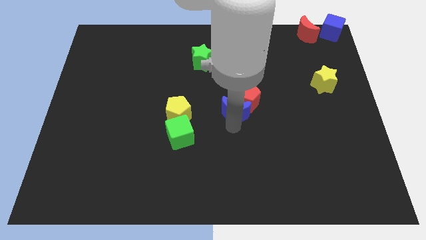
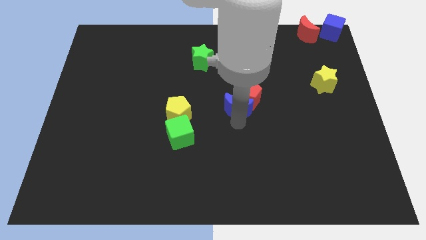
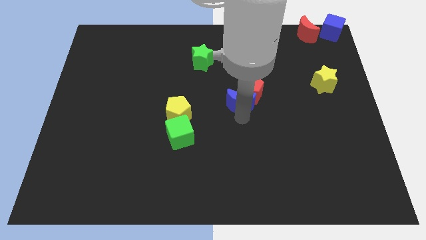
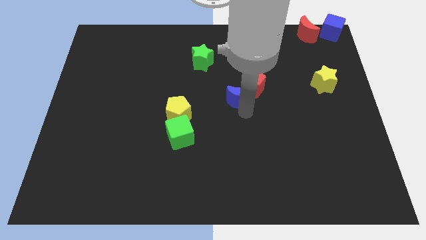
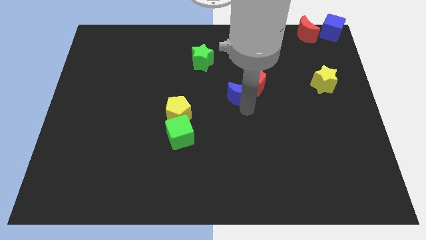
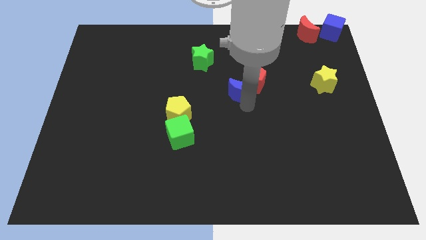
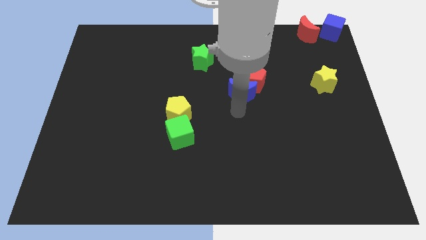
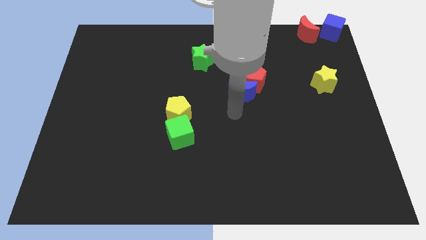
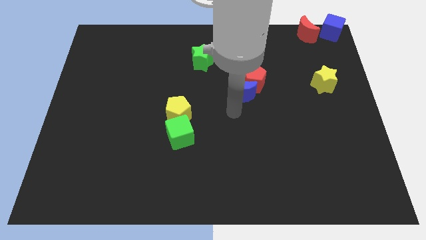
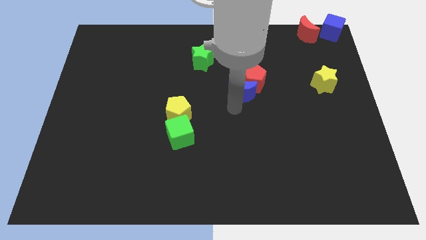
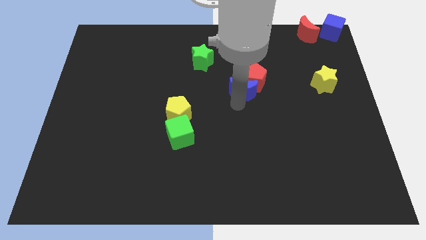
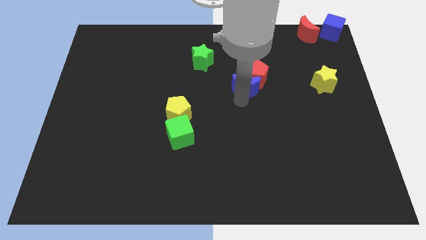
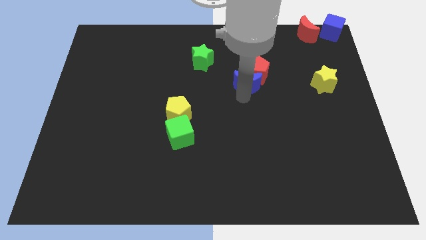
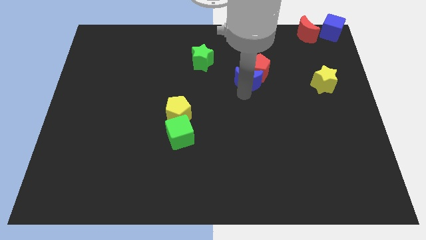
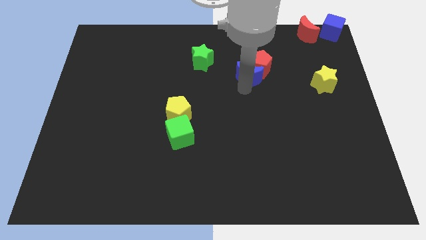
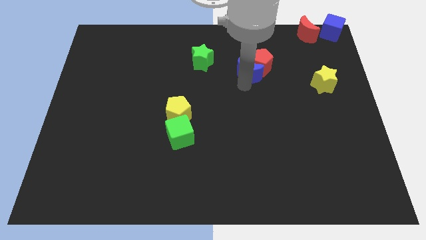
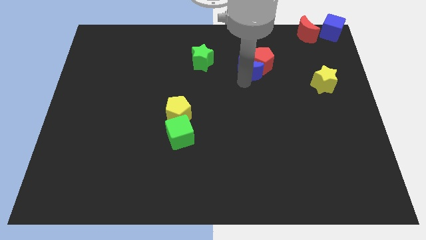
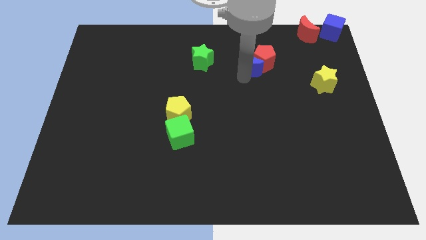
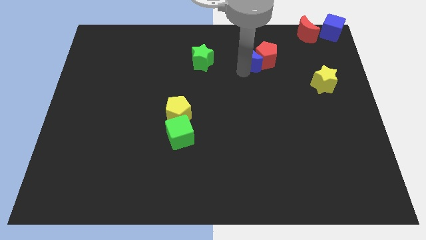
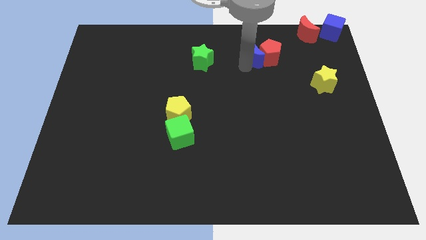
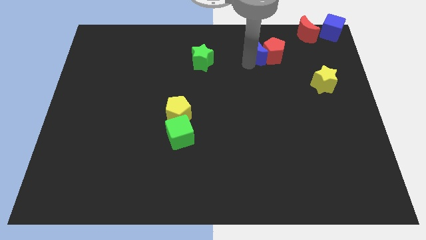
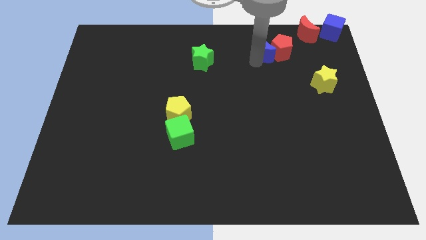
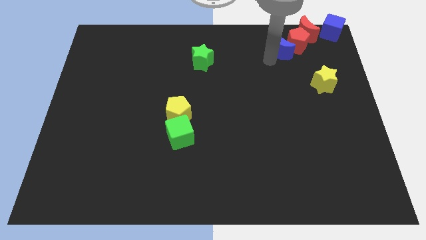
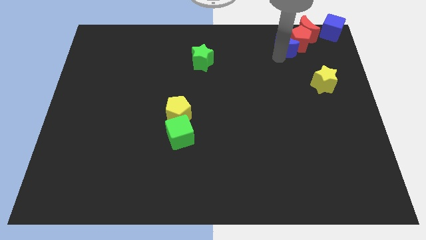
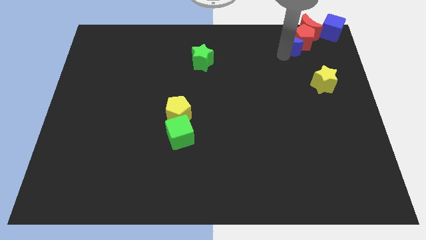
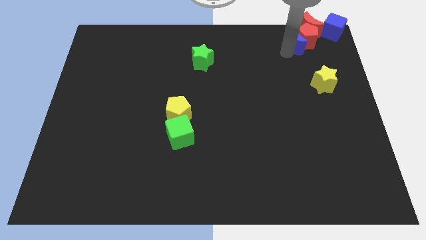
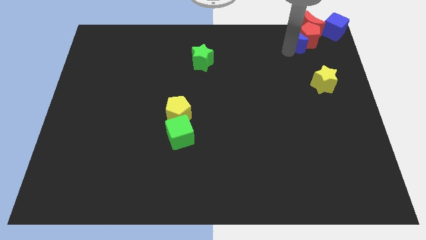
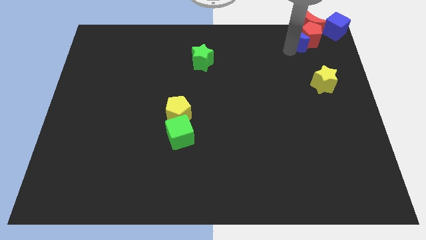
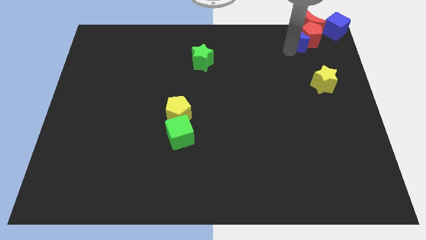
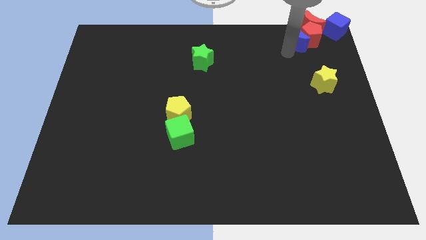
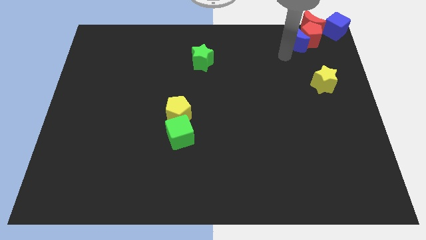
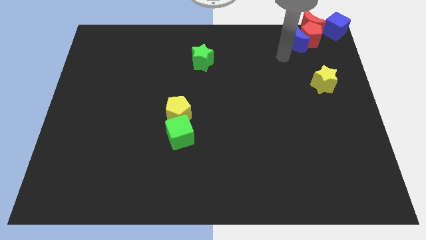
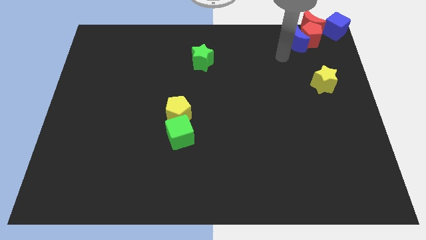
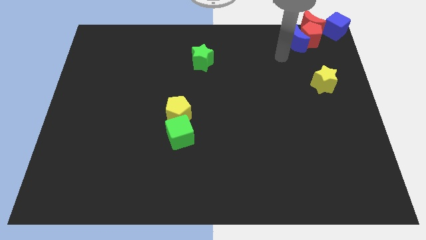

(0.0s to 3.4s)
move the red pentagon and blue moon to the top right corner of the board

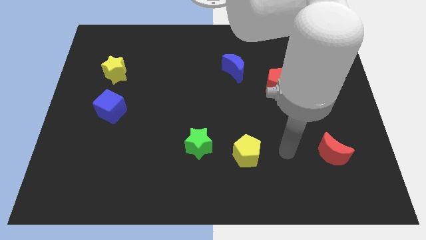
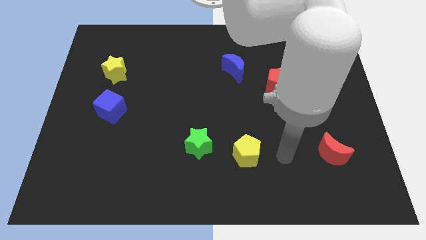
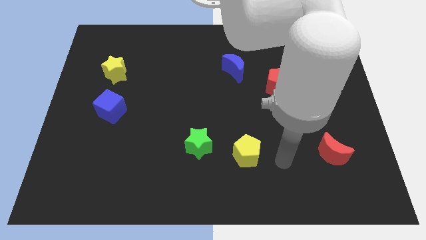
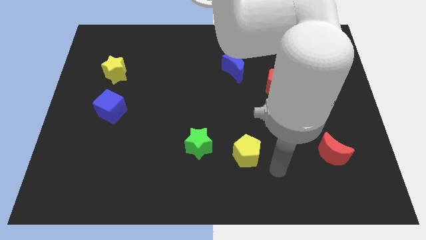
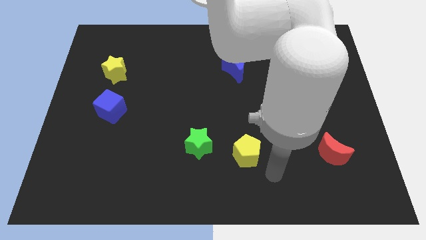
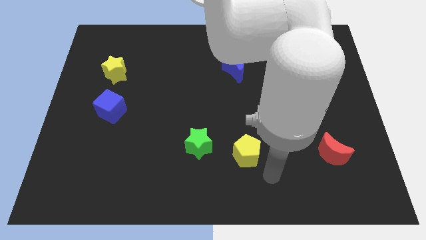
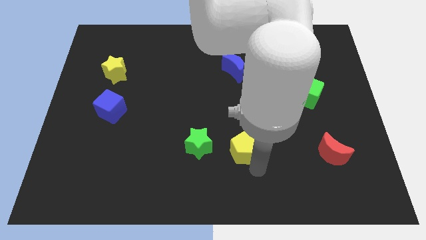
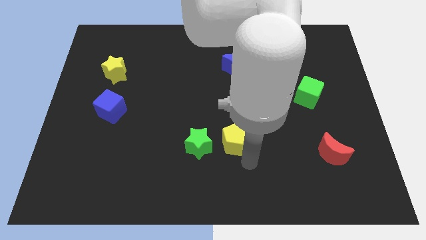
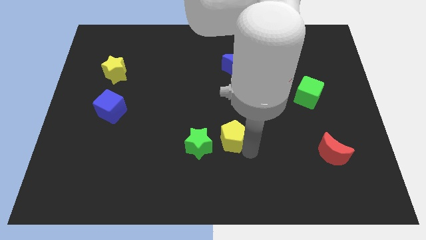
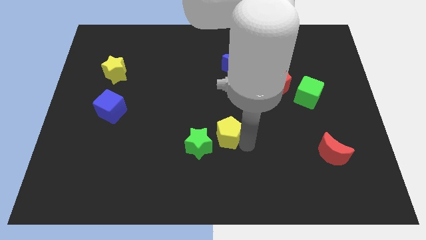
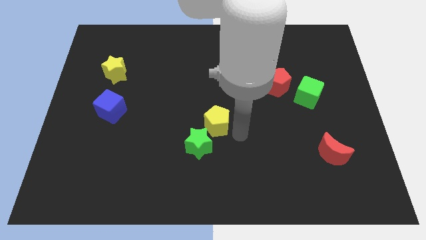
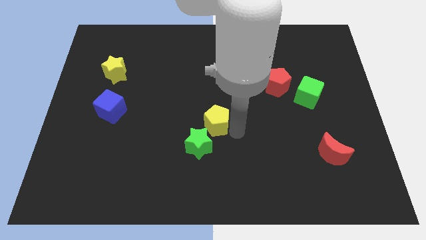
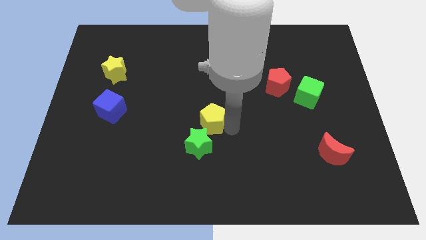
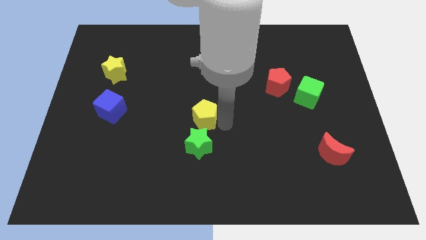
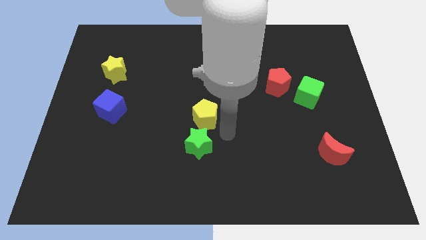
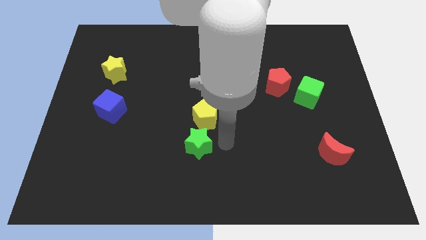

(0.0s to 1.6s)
push the yellow pentagon to the top side of the green star

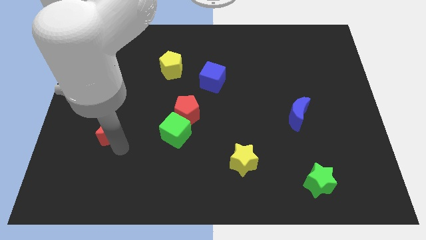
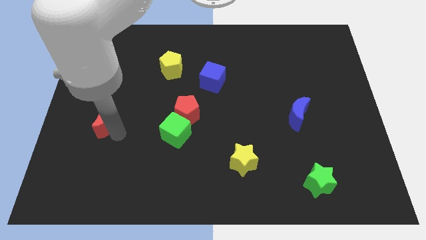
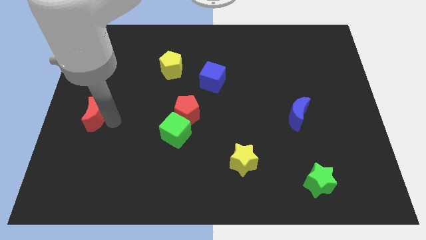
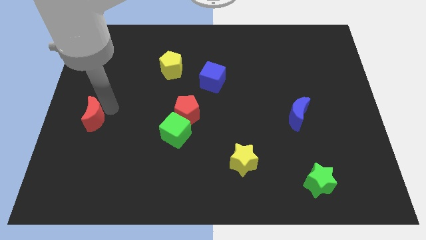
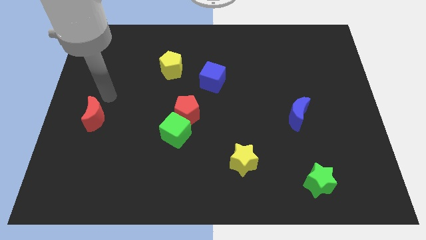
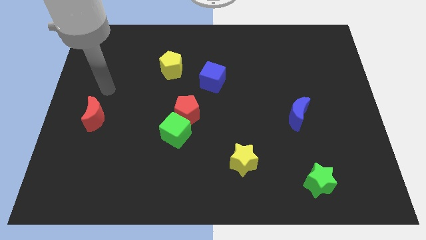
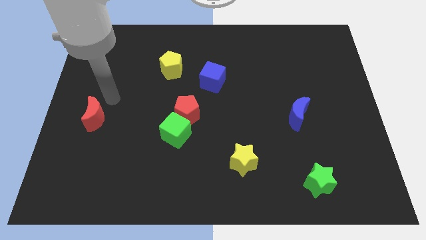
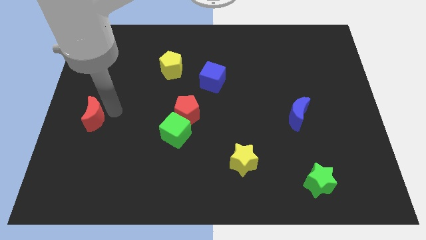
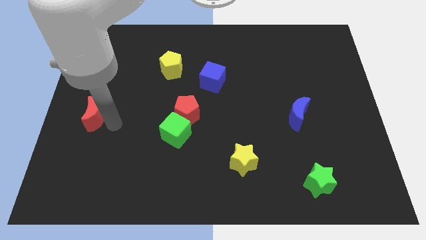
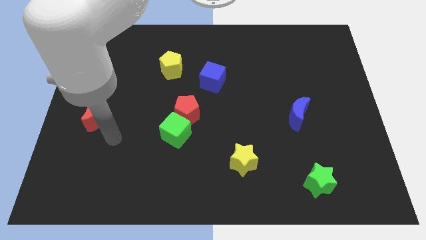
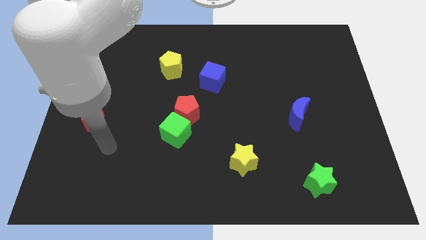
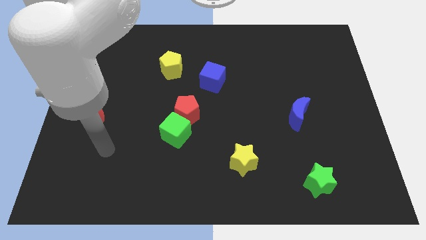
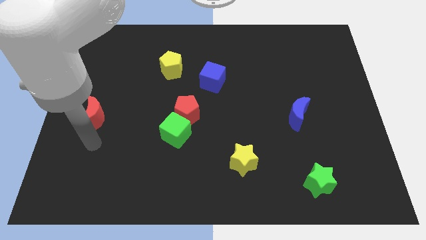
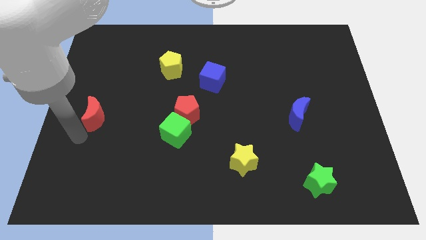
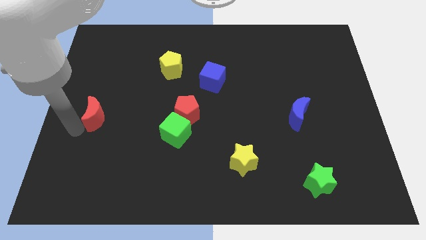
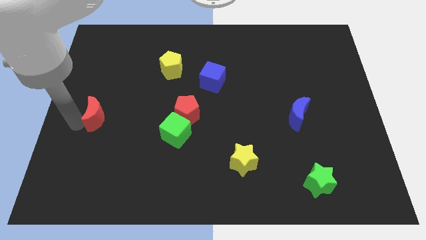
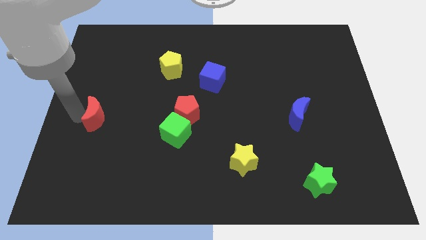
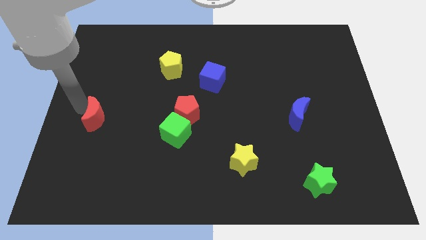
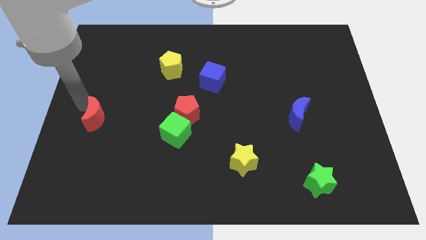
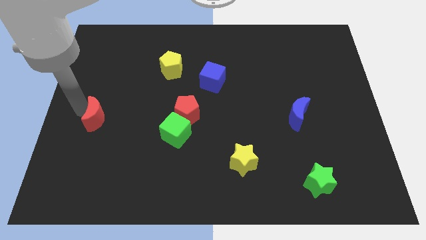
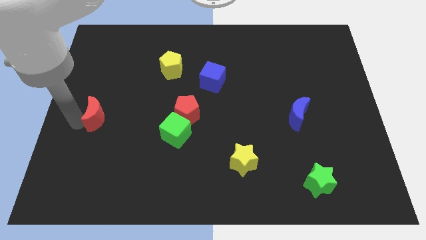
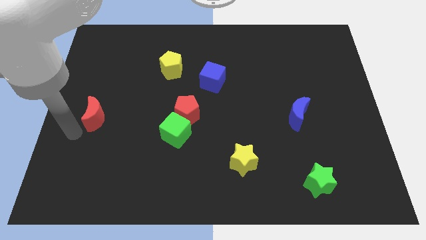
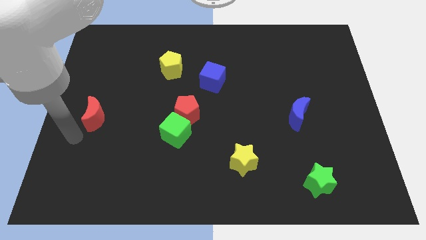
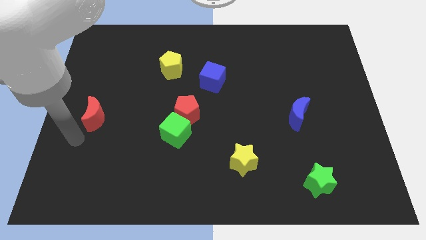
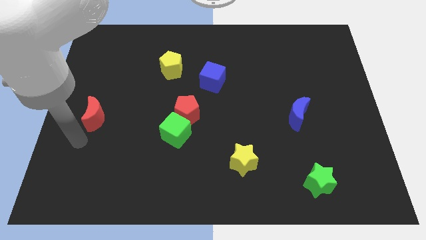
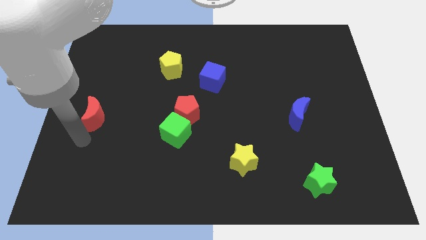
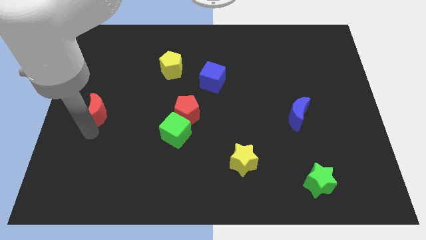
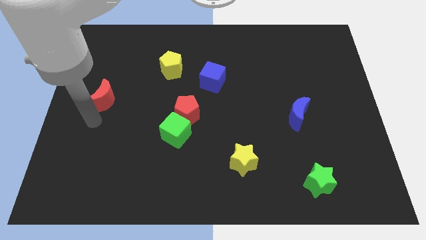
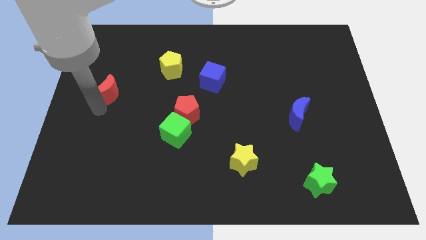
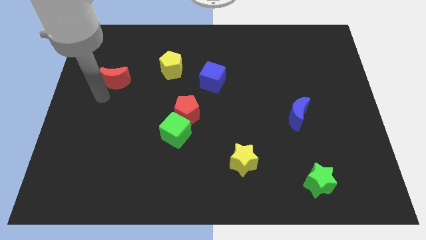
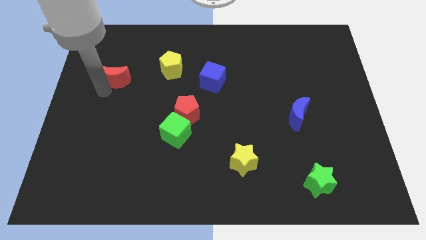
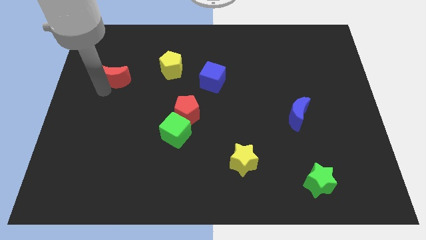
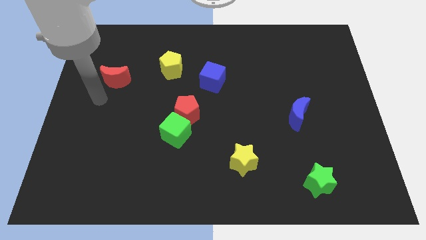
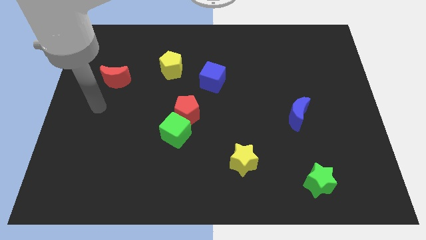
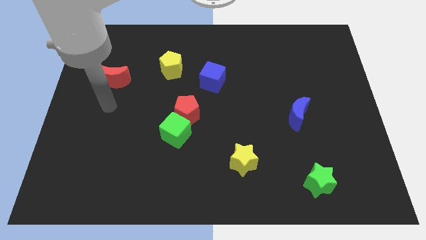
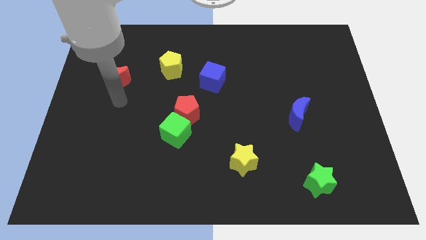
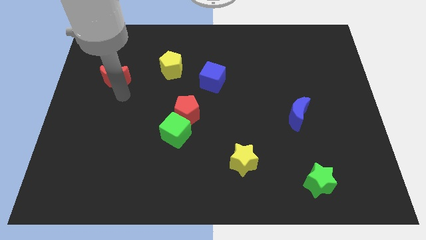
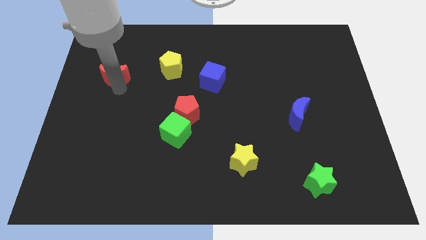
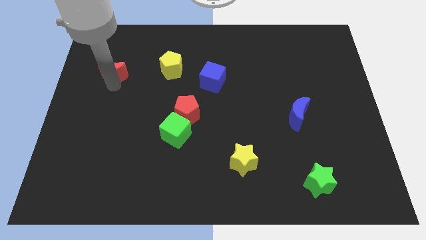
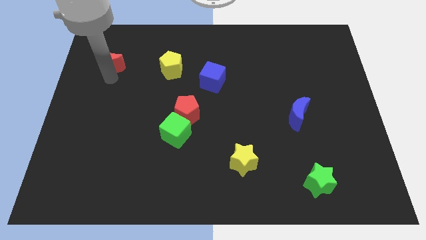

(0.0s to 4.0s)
push the red moon horizontally to the left side of the yellow pentagon
